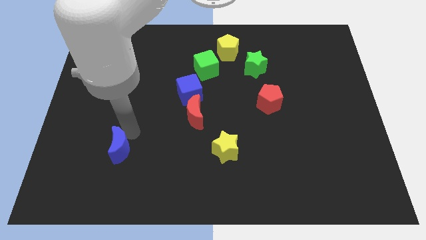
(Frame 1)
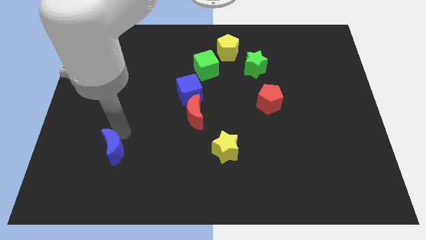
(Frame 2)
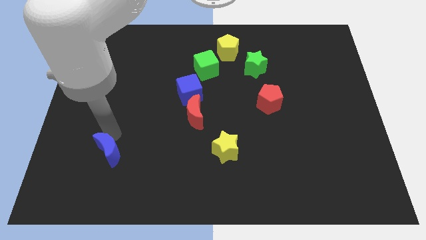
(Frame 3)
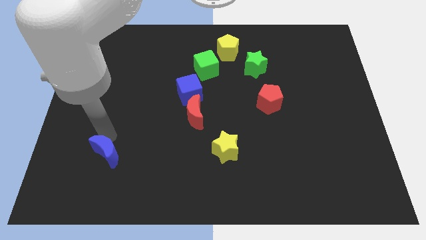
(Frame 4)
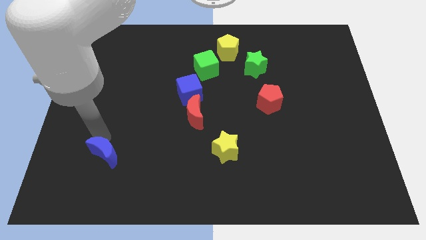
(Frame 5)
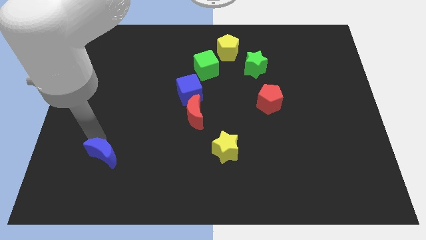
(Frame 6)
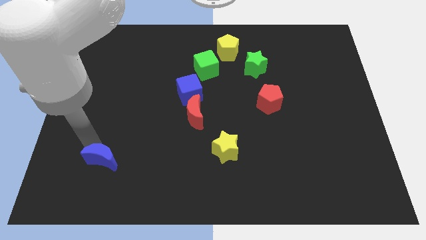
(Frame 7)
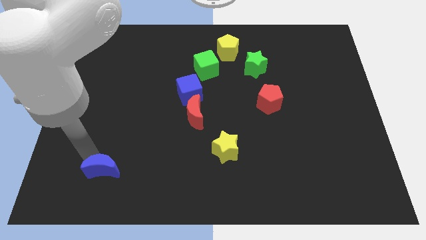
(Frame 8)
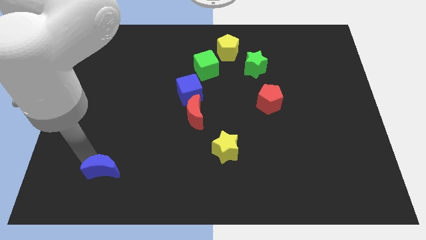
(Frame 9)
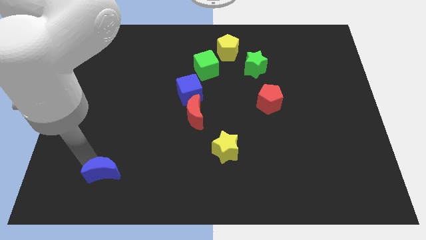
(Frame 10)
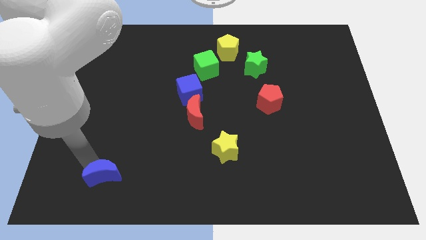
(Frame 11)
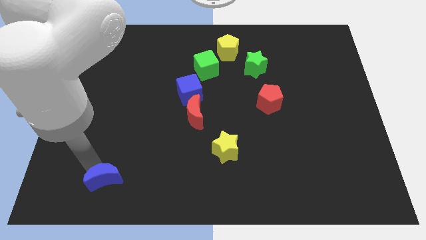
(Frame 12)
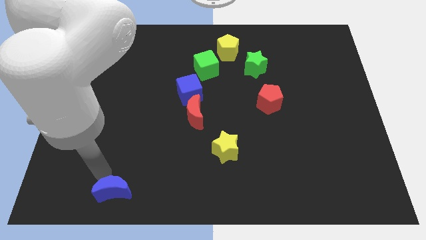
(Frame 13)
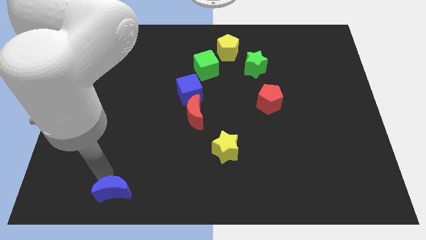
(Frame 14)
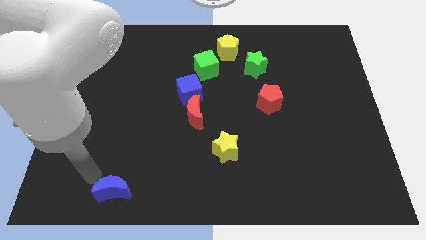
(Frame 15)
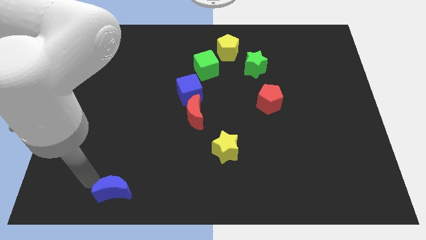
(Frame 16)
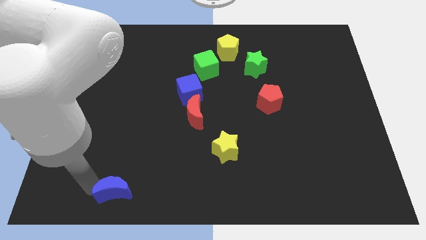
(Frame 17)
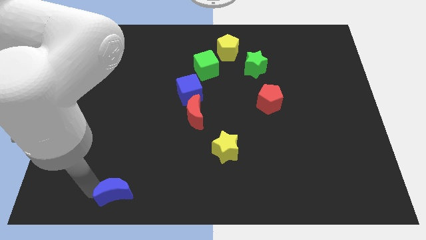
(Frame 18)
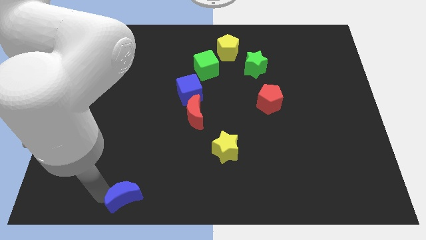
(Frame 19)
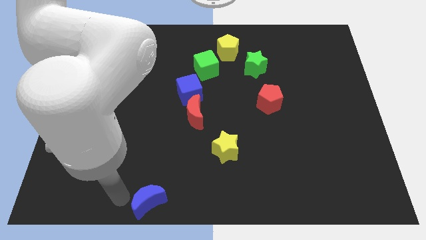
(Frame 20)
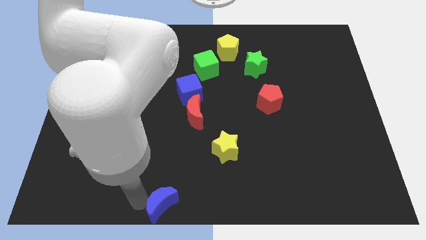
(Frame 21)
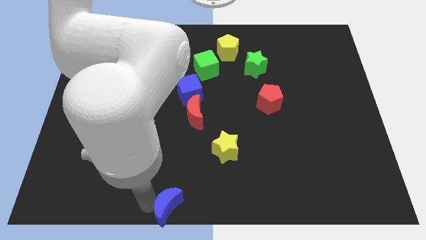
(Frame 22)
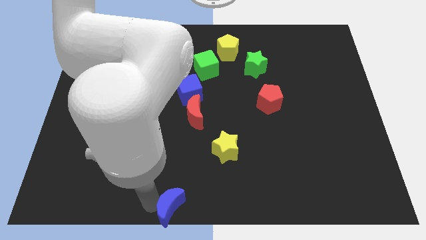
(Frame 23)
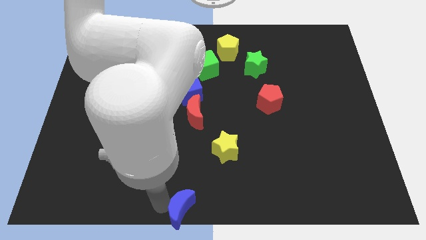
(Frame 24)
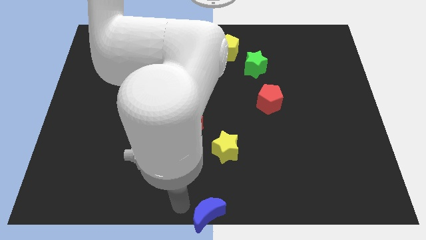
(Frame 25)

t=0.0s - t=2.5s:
move blue moon to the bottom center

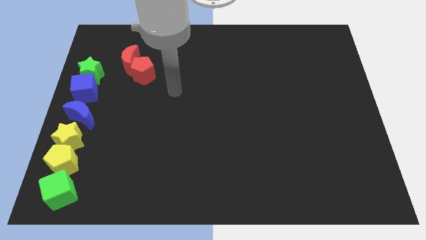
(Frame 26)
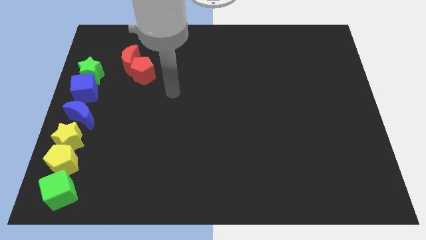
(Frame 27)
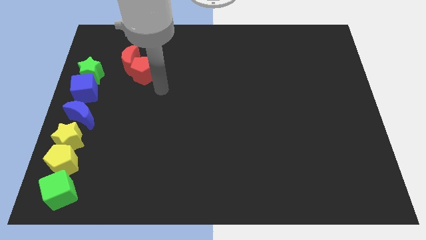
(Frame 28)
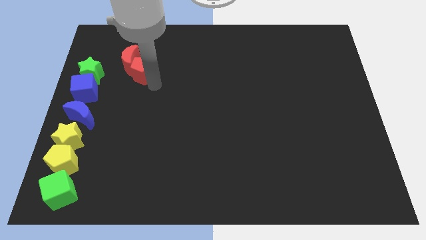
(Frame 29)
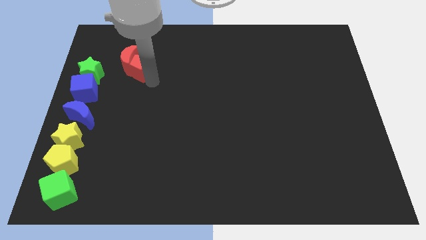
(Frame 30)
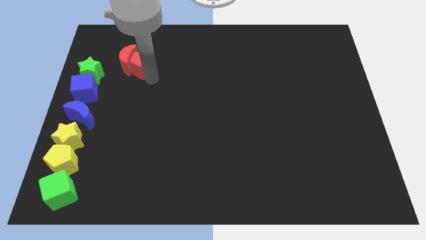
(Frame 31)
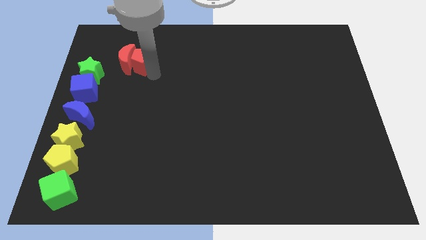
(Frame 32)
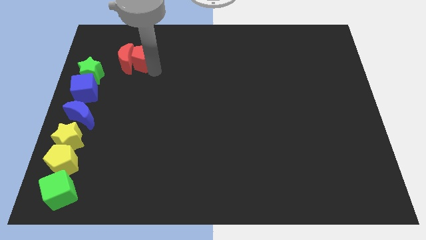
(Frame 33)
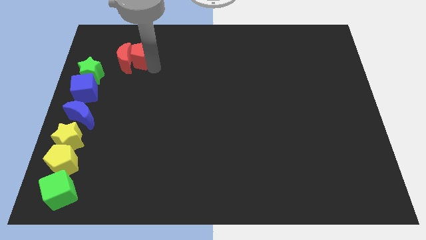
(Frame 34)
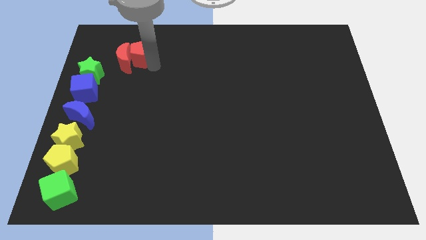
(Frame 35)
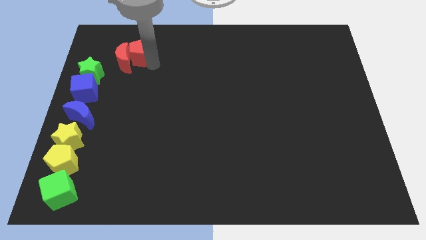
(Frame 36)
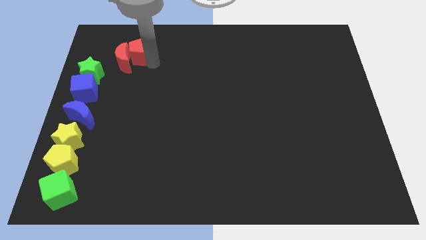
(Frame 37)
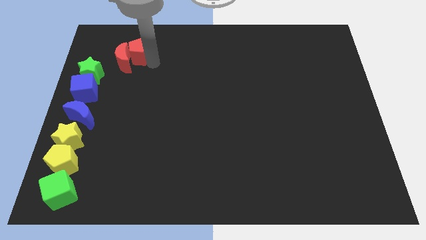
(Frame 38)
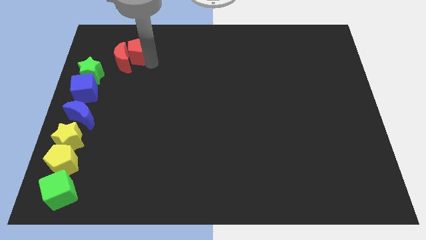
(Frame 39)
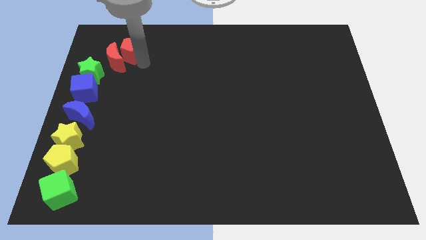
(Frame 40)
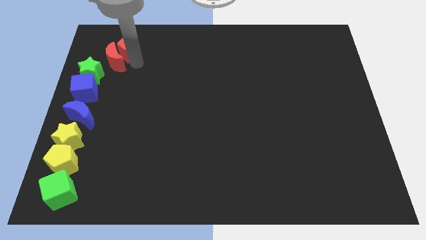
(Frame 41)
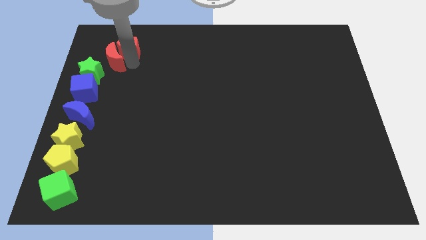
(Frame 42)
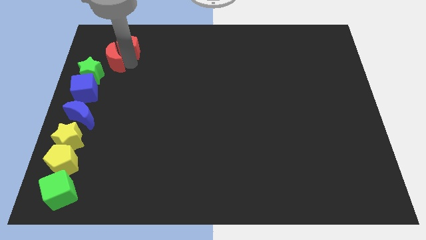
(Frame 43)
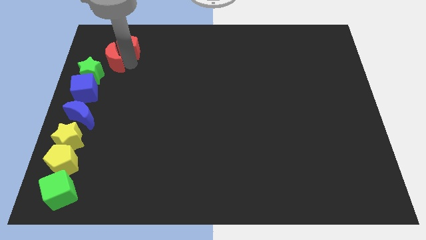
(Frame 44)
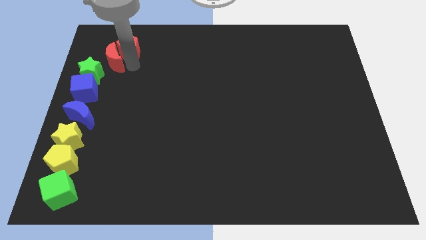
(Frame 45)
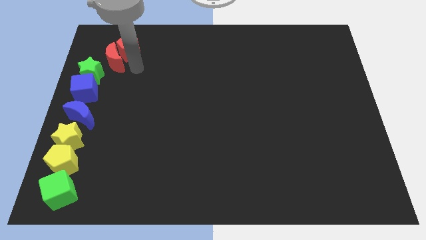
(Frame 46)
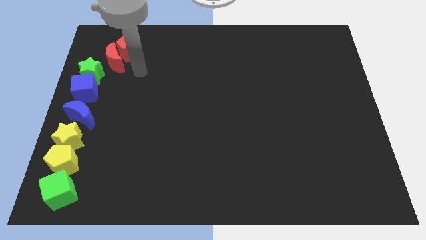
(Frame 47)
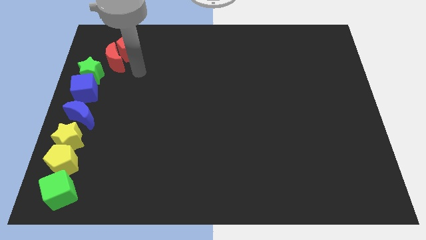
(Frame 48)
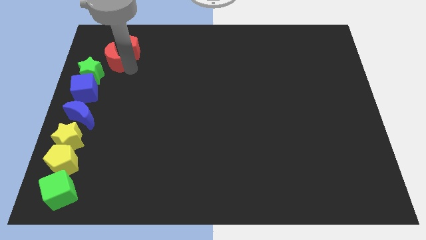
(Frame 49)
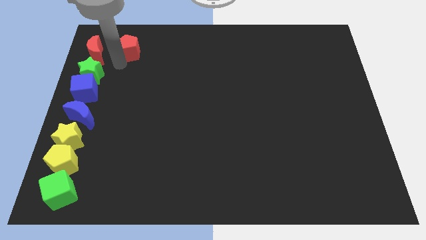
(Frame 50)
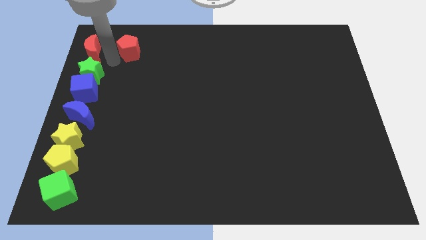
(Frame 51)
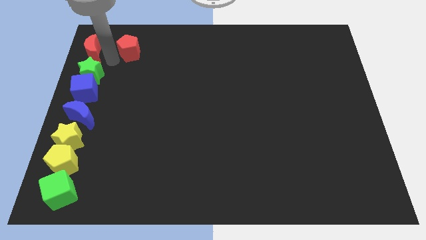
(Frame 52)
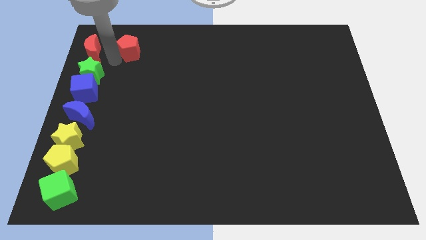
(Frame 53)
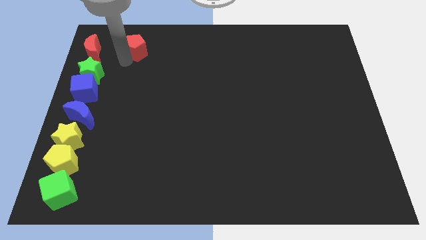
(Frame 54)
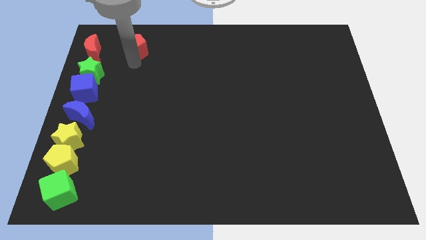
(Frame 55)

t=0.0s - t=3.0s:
place red crescent to the top of group of blocks to form vertical line

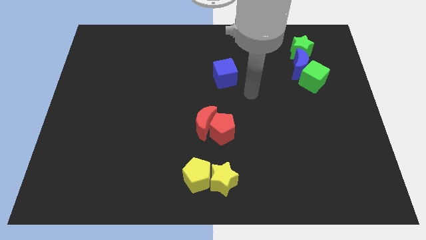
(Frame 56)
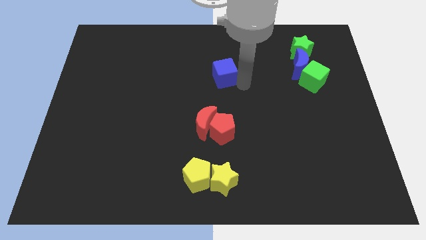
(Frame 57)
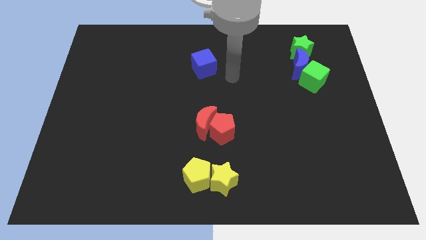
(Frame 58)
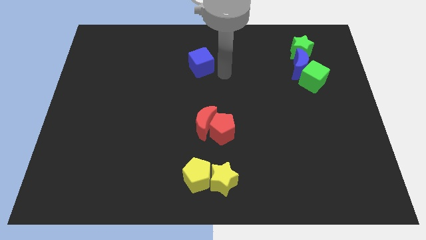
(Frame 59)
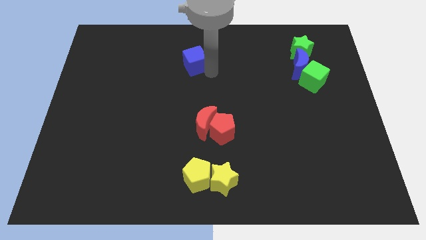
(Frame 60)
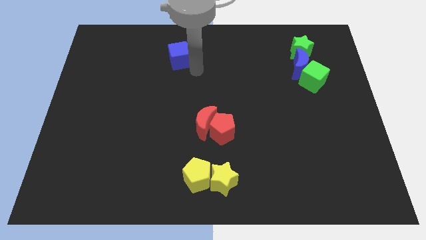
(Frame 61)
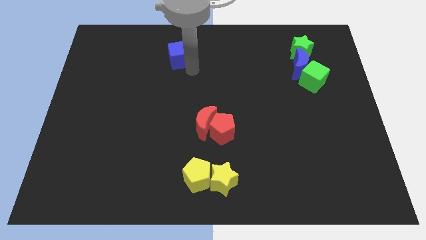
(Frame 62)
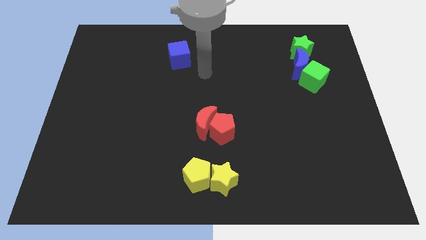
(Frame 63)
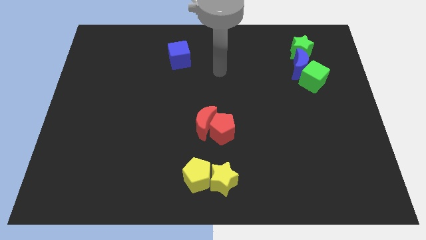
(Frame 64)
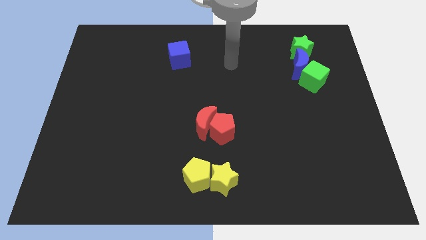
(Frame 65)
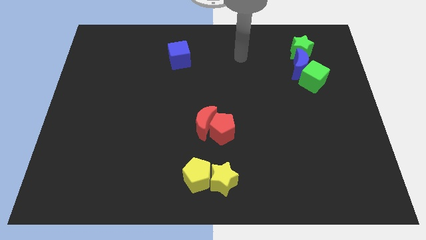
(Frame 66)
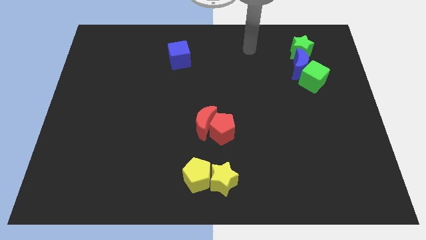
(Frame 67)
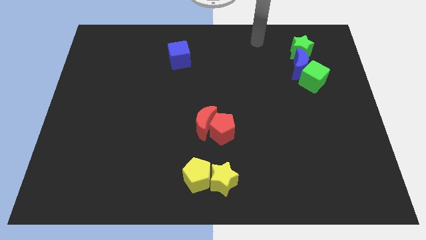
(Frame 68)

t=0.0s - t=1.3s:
drag the blue cube towards the top left

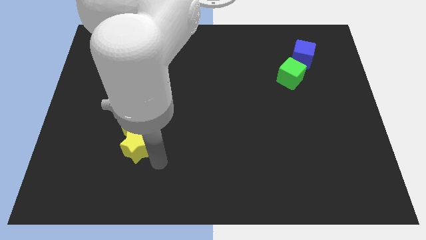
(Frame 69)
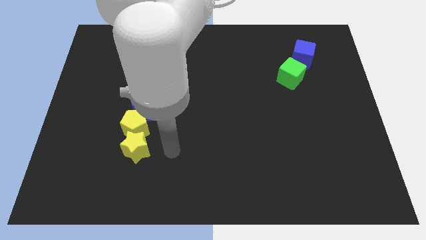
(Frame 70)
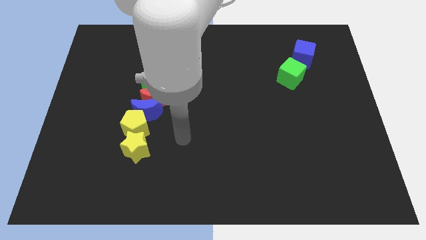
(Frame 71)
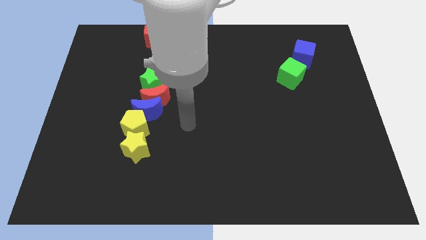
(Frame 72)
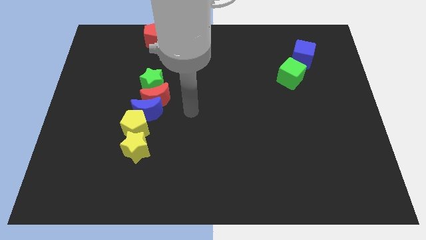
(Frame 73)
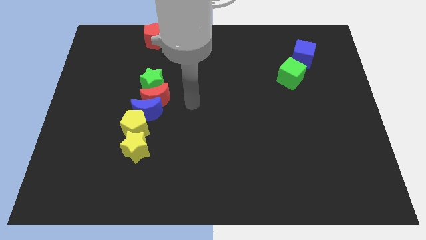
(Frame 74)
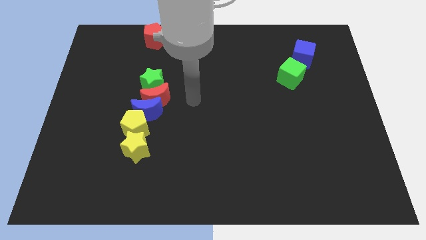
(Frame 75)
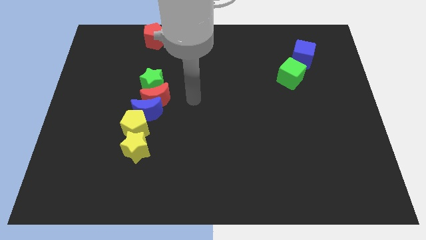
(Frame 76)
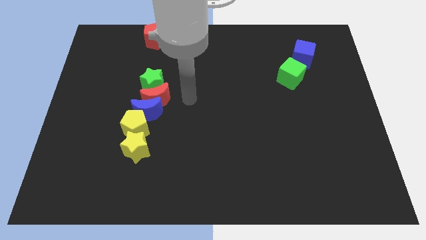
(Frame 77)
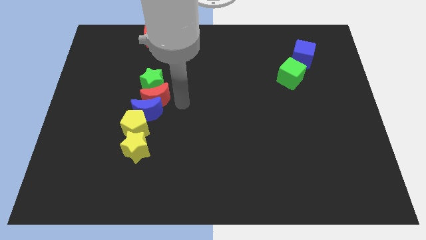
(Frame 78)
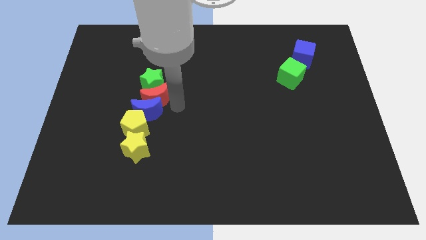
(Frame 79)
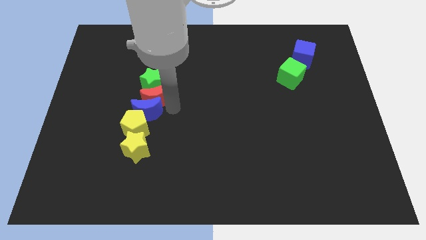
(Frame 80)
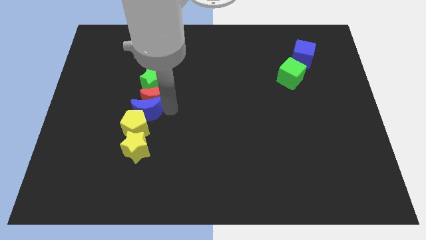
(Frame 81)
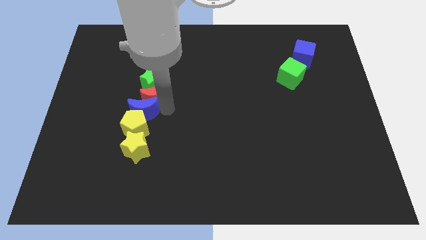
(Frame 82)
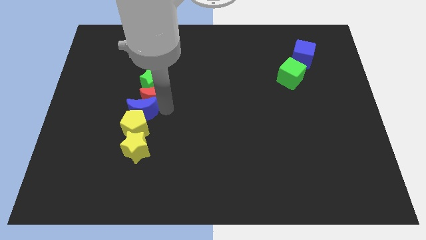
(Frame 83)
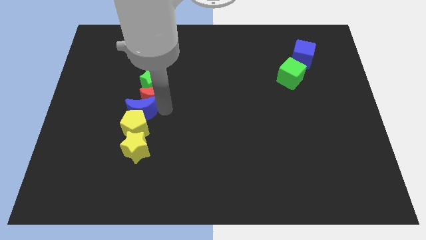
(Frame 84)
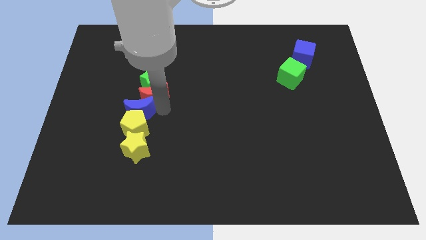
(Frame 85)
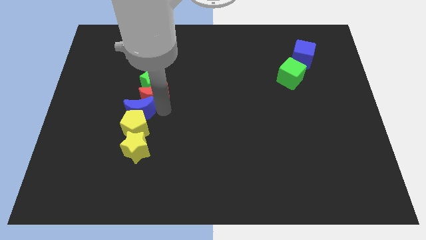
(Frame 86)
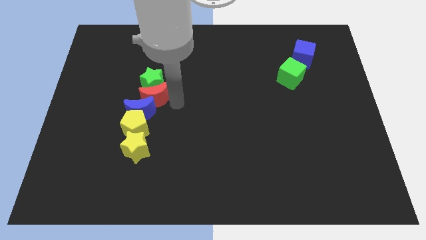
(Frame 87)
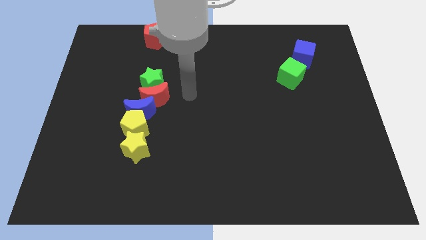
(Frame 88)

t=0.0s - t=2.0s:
move the blue moon slightly to the left
